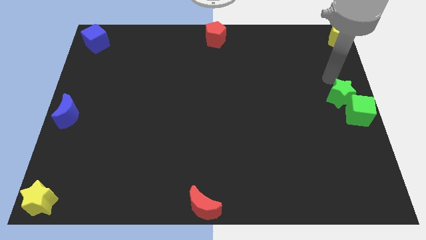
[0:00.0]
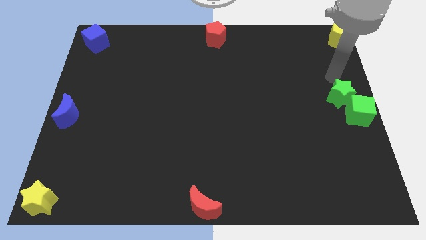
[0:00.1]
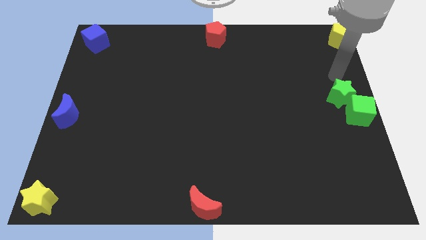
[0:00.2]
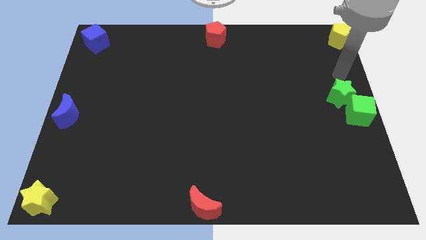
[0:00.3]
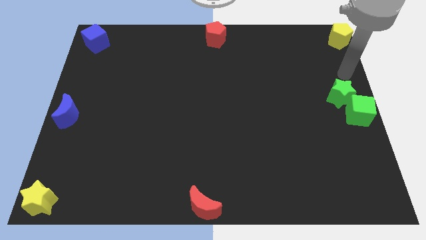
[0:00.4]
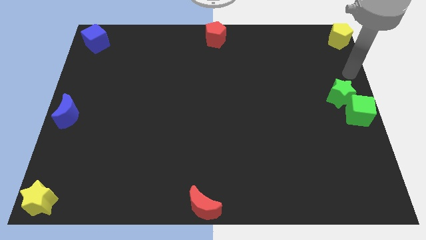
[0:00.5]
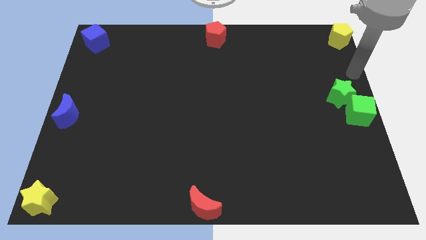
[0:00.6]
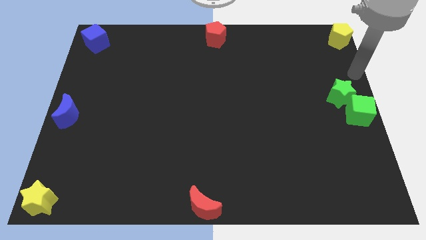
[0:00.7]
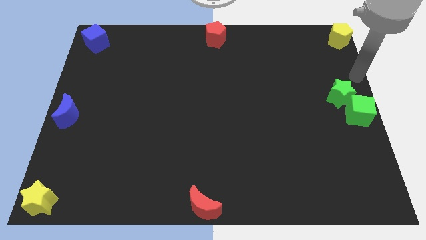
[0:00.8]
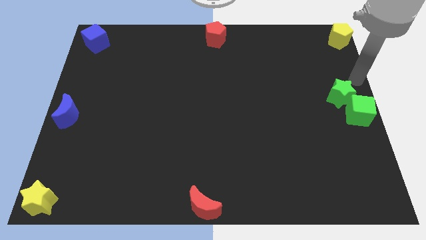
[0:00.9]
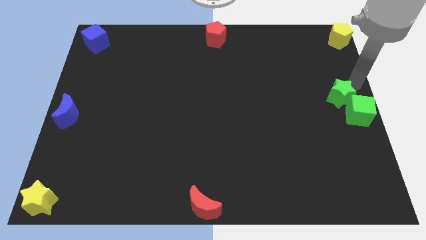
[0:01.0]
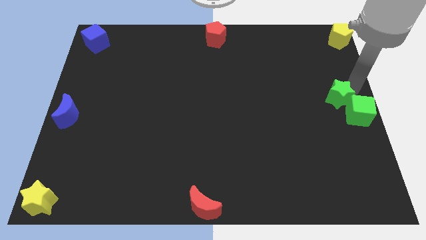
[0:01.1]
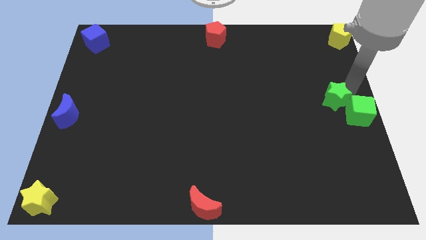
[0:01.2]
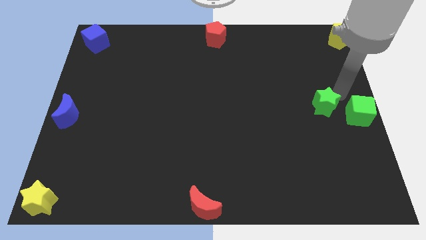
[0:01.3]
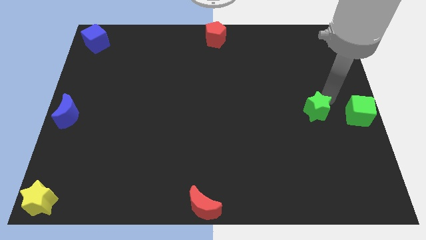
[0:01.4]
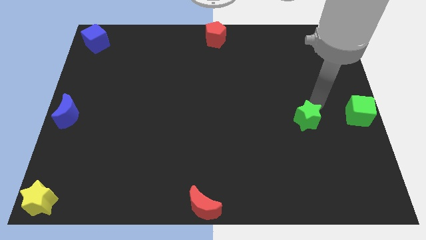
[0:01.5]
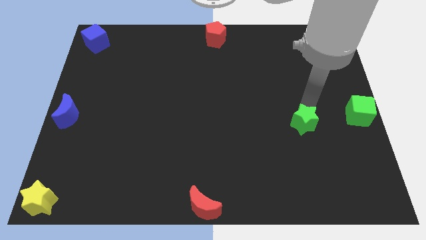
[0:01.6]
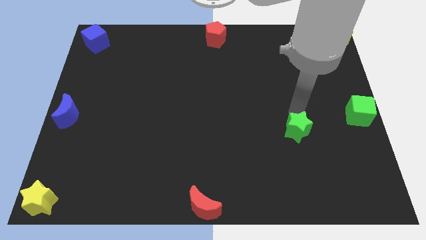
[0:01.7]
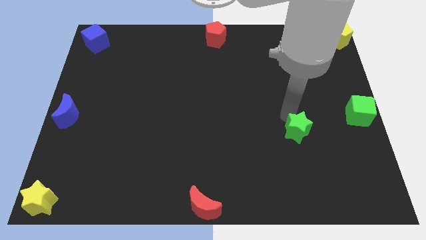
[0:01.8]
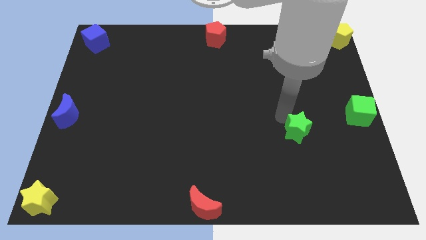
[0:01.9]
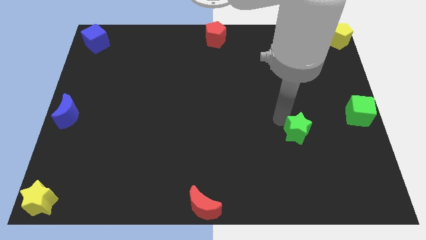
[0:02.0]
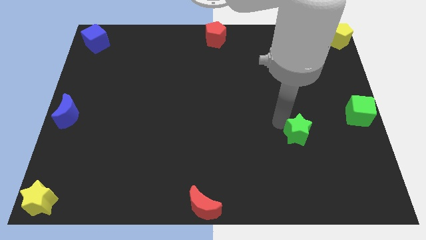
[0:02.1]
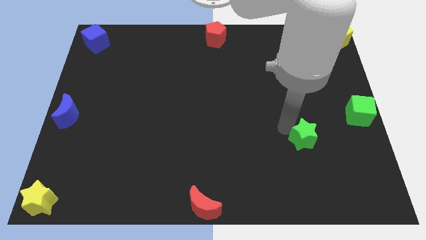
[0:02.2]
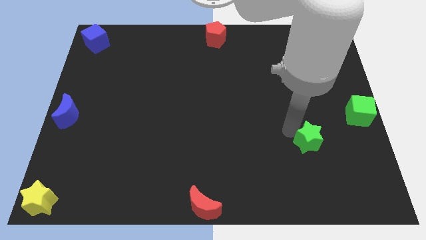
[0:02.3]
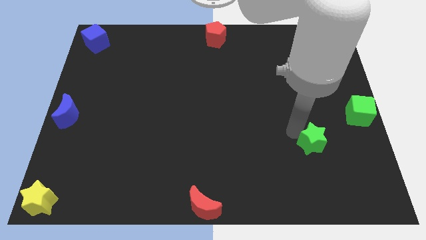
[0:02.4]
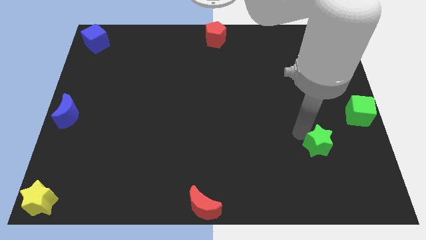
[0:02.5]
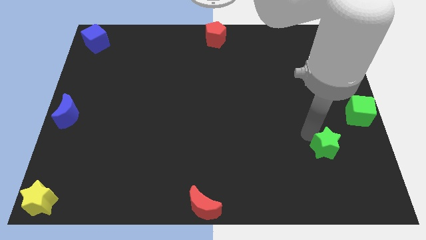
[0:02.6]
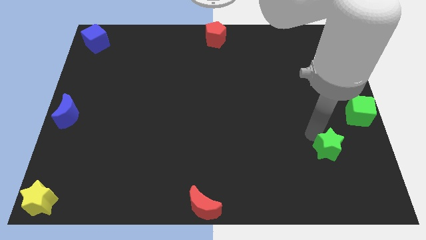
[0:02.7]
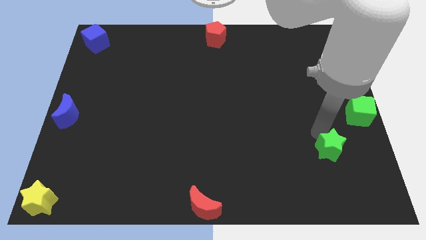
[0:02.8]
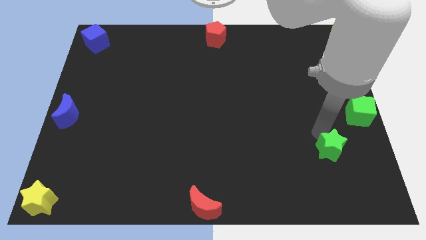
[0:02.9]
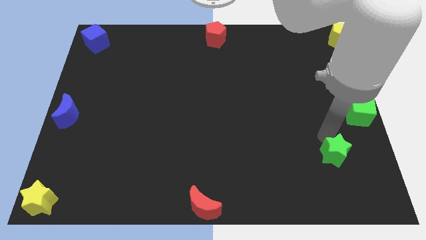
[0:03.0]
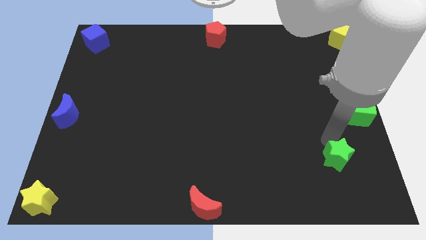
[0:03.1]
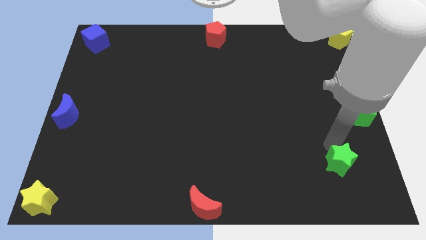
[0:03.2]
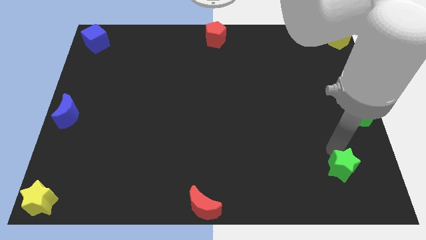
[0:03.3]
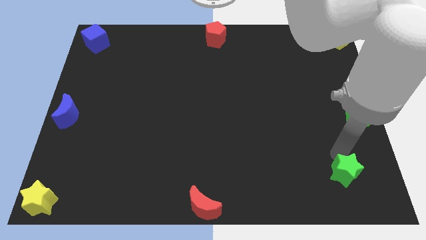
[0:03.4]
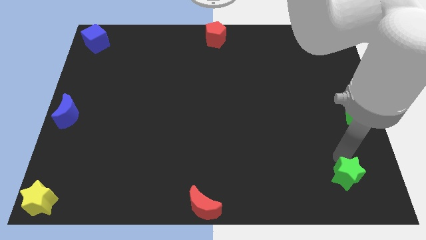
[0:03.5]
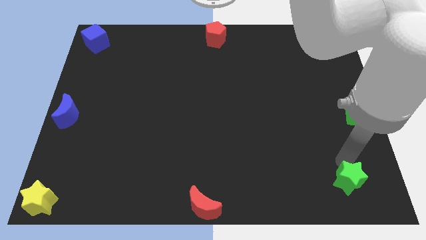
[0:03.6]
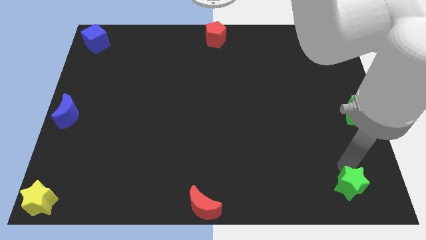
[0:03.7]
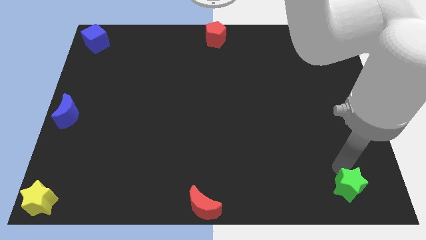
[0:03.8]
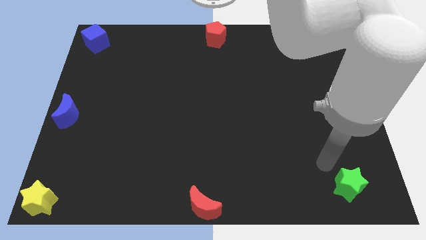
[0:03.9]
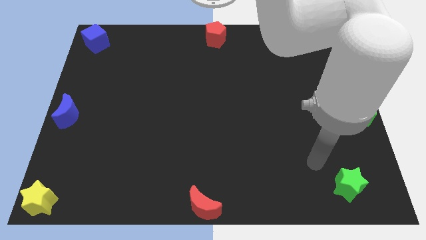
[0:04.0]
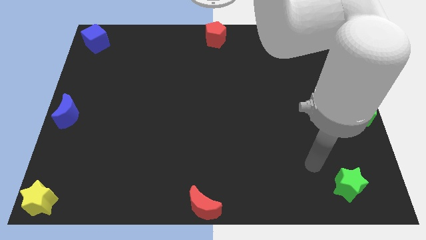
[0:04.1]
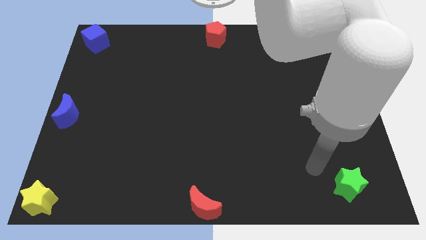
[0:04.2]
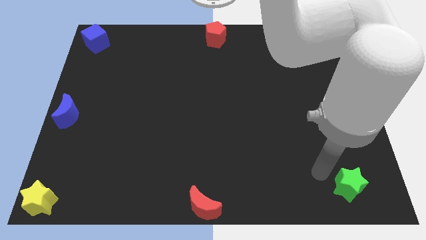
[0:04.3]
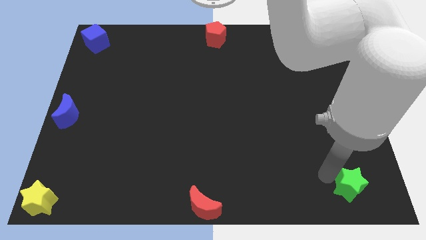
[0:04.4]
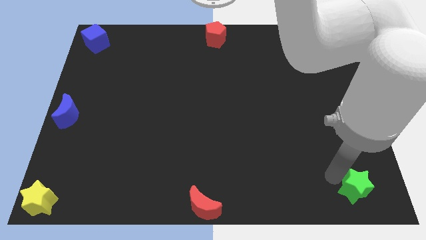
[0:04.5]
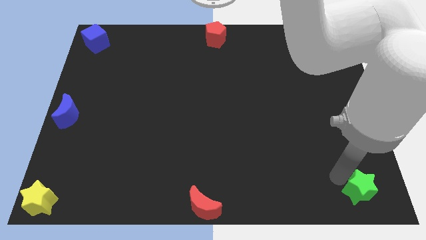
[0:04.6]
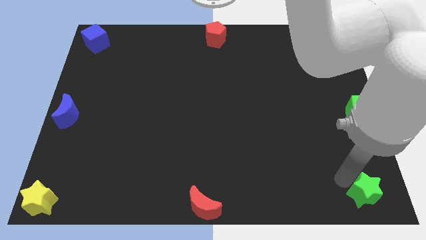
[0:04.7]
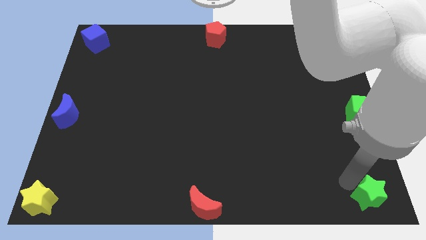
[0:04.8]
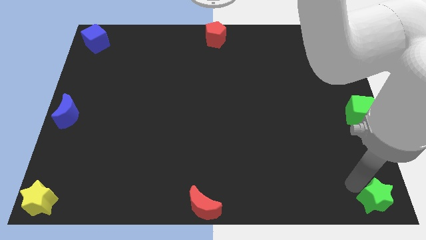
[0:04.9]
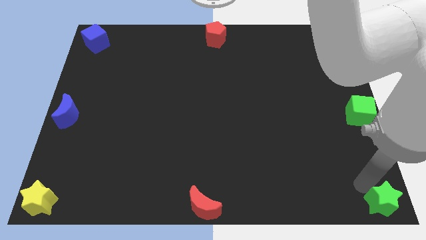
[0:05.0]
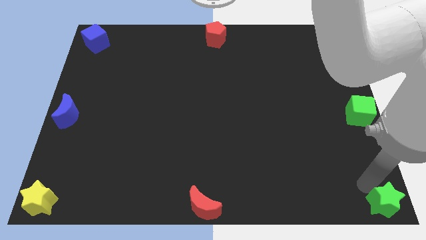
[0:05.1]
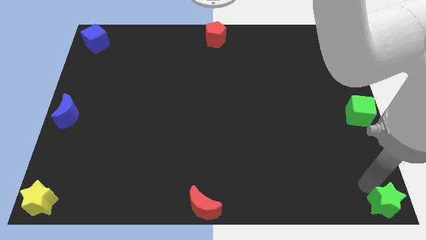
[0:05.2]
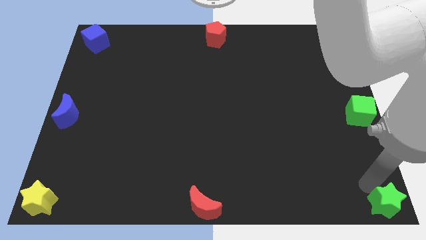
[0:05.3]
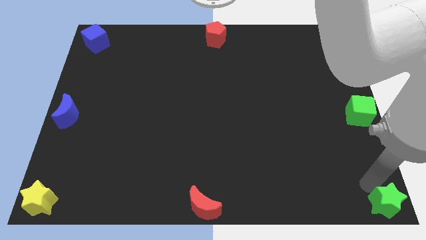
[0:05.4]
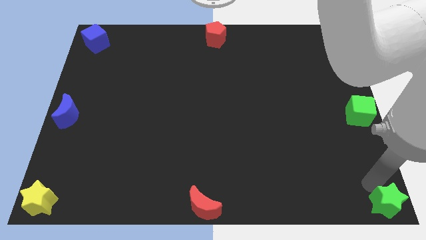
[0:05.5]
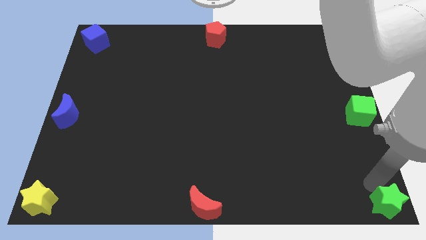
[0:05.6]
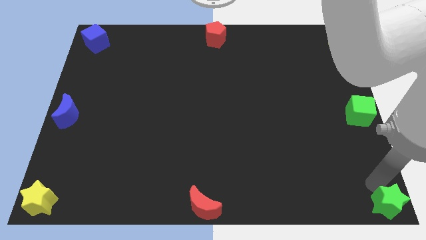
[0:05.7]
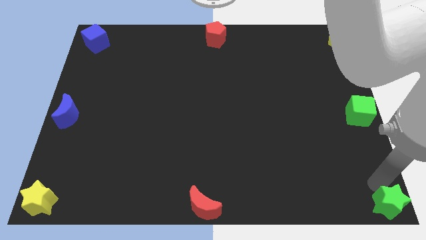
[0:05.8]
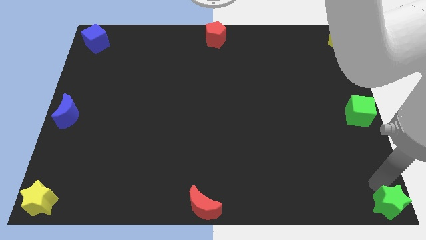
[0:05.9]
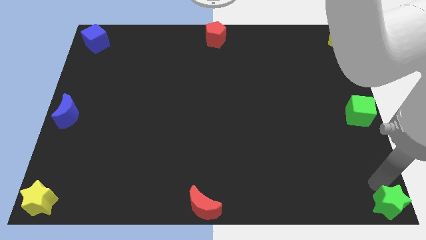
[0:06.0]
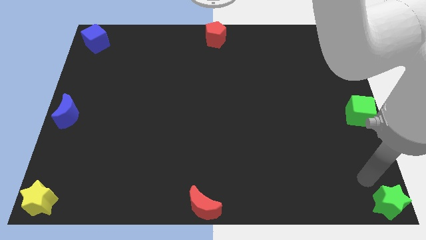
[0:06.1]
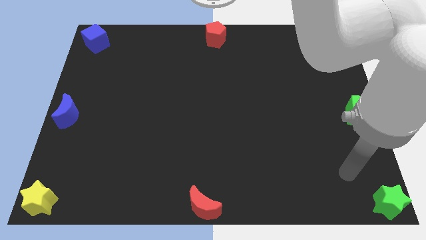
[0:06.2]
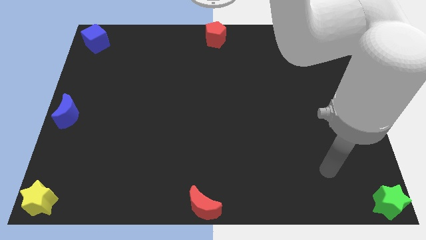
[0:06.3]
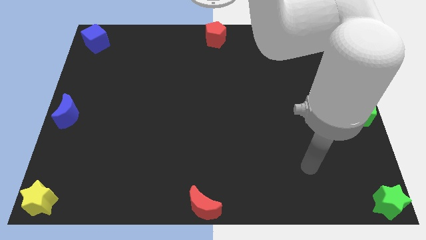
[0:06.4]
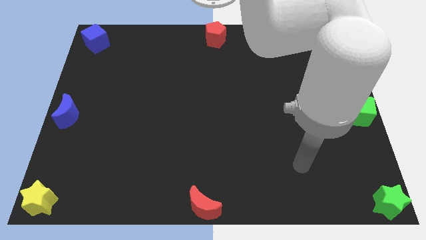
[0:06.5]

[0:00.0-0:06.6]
move green star to the bottom right corner

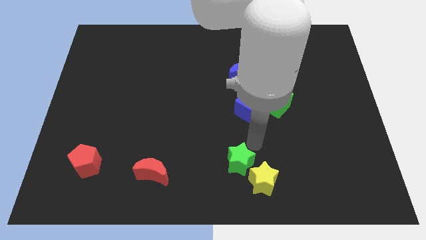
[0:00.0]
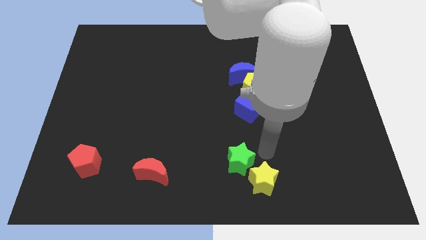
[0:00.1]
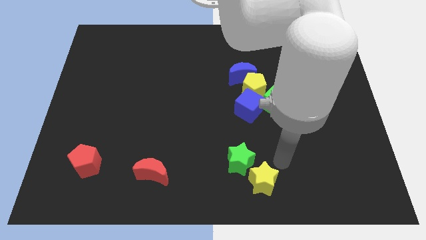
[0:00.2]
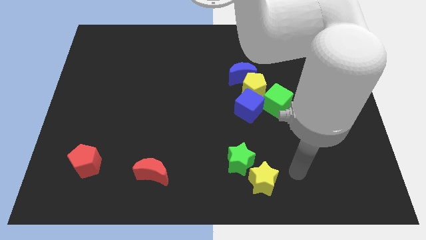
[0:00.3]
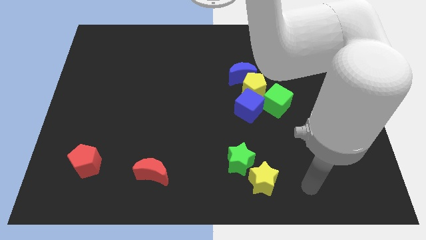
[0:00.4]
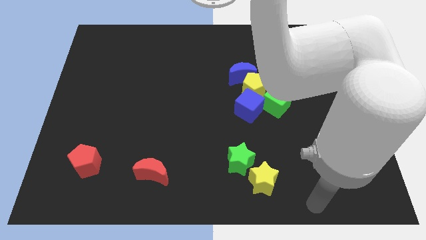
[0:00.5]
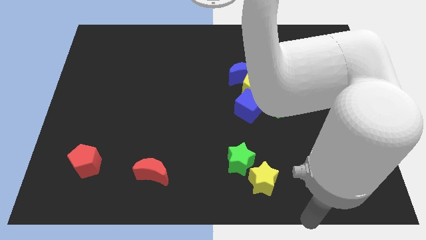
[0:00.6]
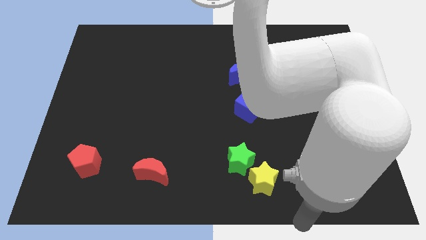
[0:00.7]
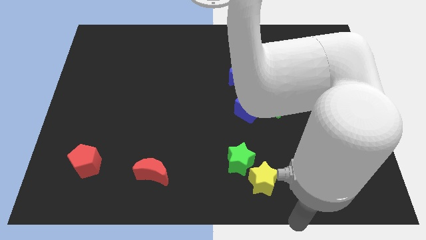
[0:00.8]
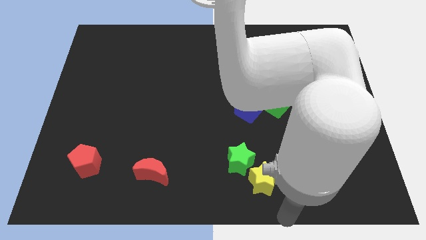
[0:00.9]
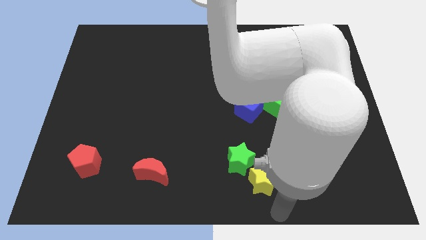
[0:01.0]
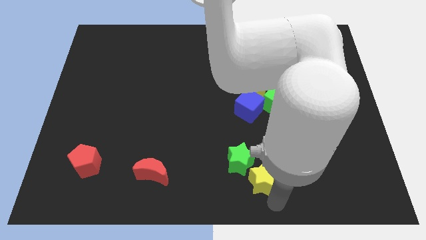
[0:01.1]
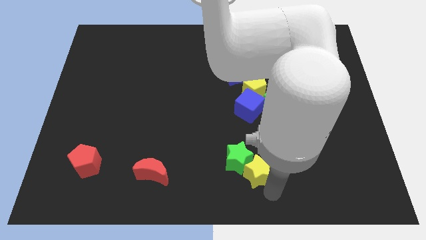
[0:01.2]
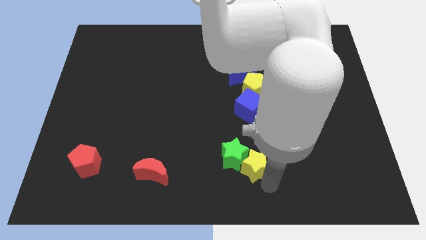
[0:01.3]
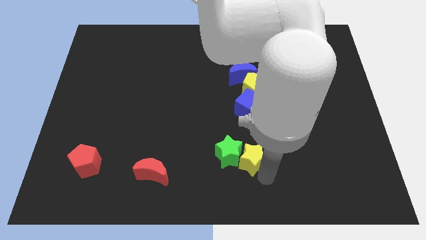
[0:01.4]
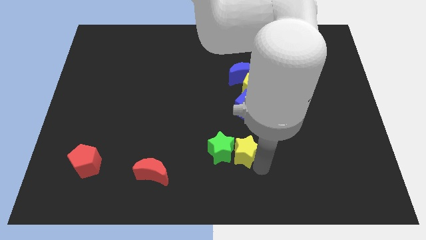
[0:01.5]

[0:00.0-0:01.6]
push the yellow star into the green star

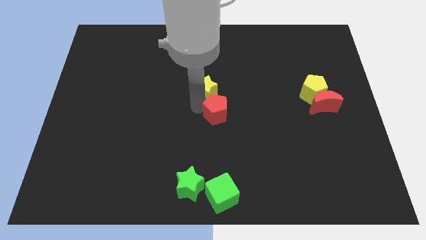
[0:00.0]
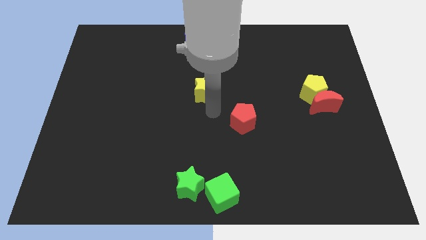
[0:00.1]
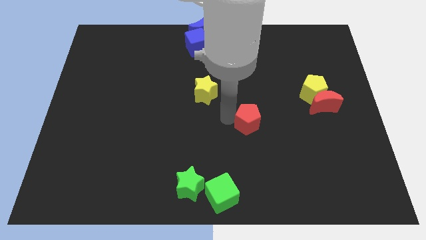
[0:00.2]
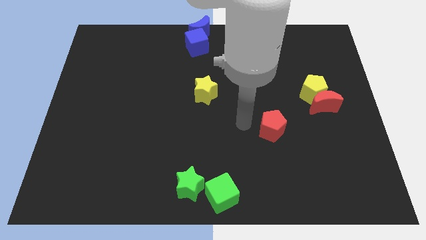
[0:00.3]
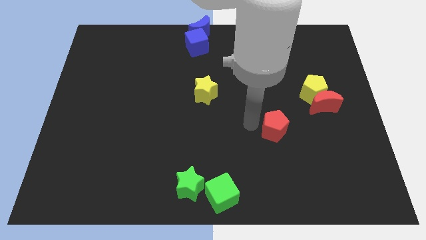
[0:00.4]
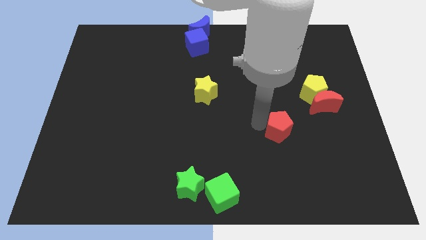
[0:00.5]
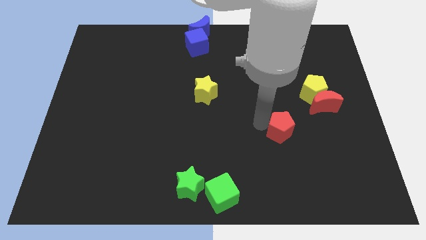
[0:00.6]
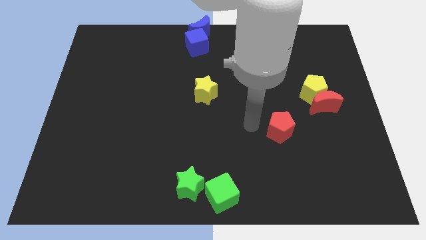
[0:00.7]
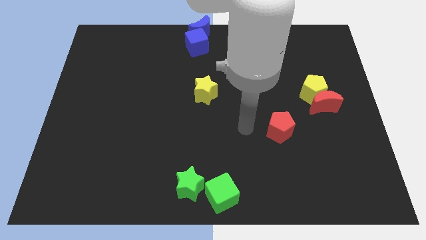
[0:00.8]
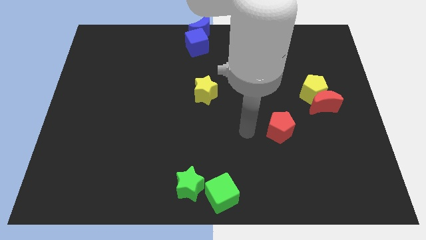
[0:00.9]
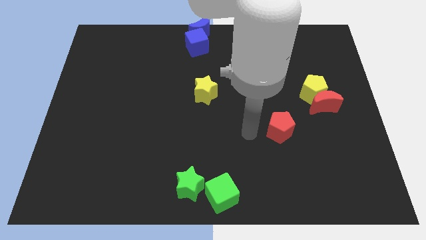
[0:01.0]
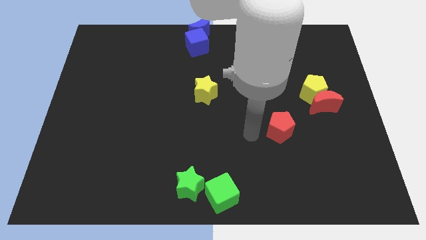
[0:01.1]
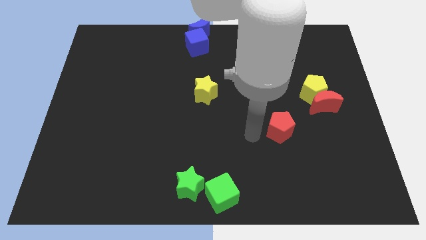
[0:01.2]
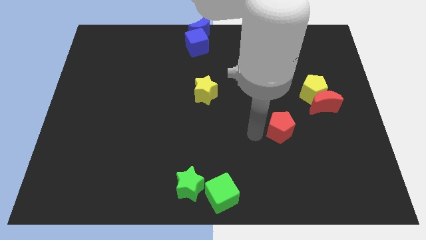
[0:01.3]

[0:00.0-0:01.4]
slide the red pentagon slightly to the right
